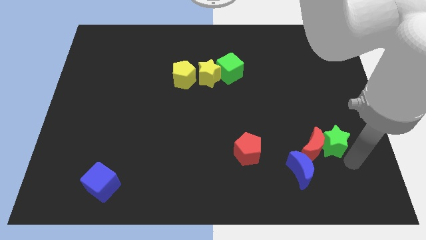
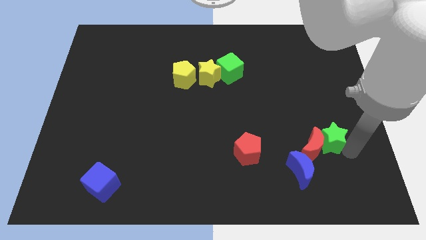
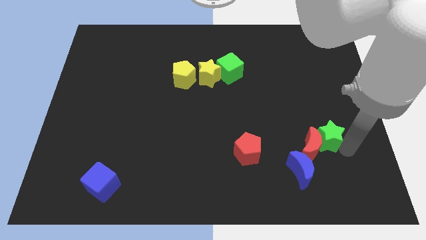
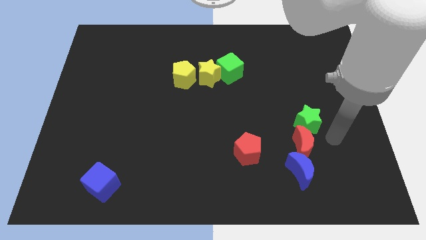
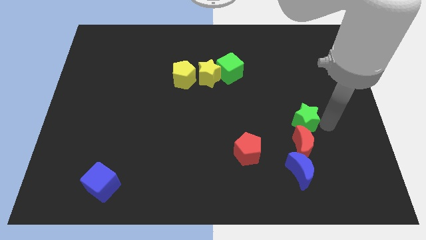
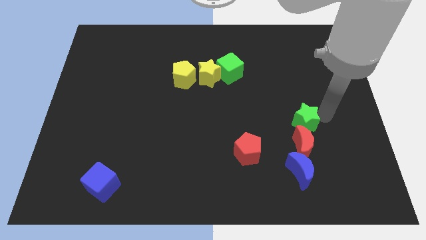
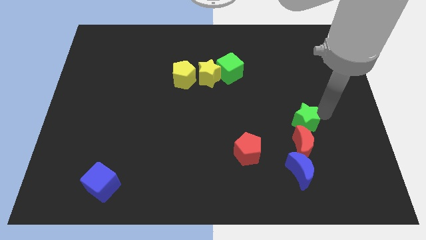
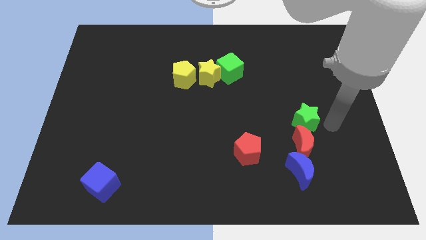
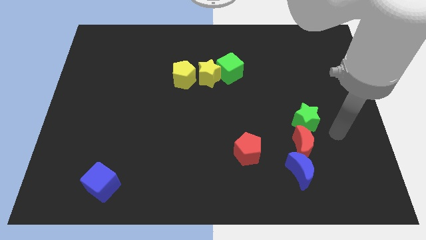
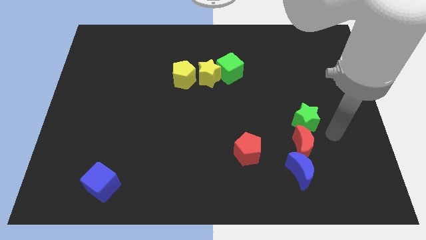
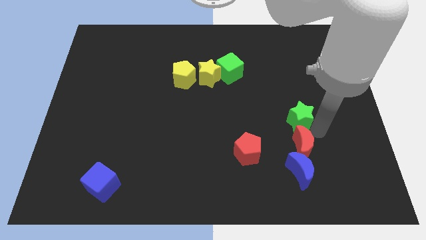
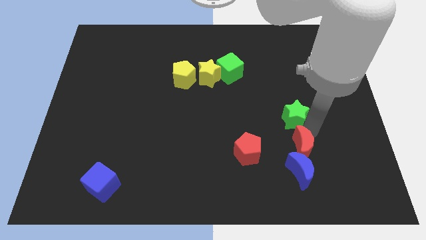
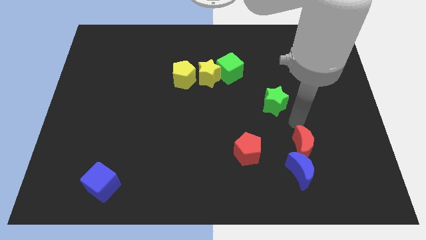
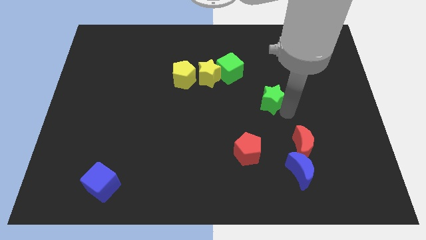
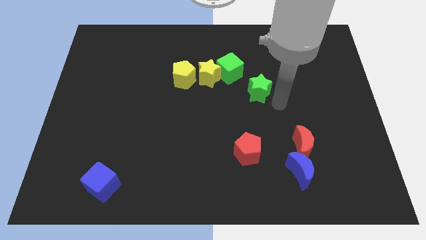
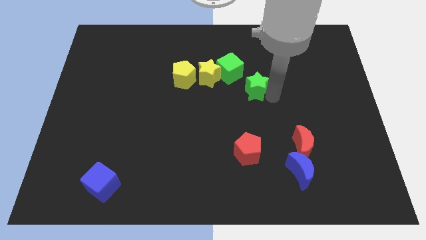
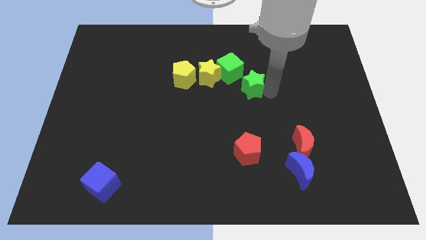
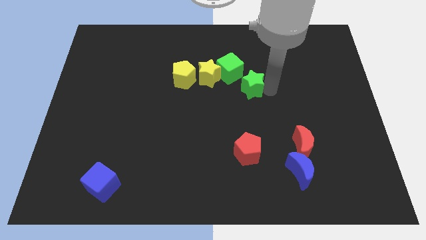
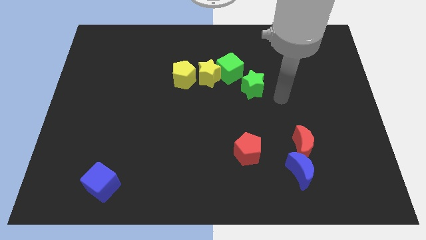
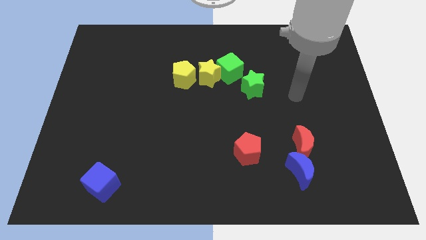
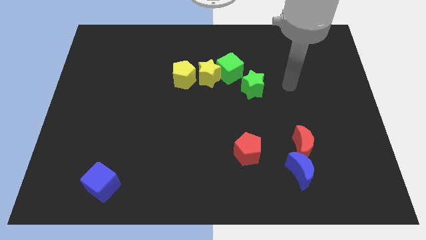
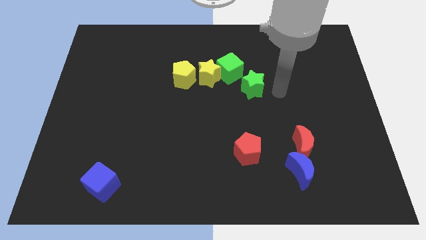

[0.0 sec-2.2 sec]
move the green star towards the bottom of the green cube

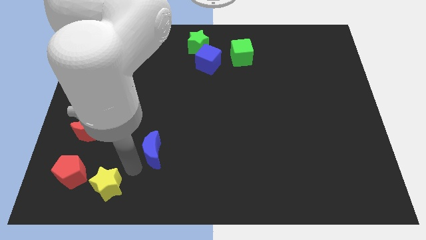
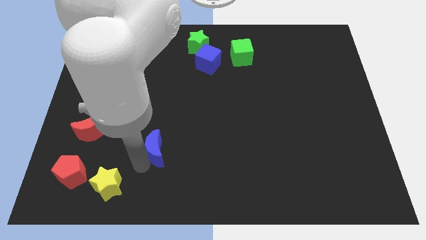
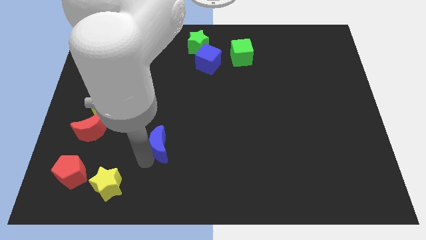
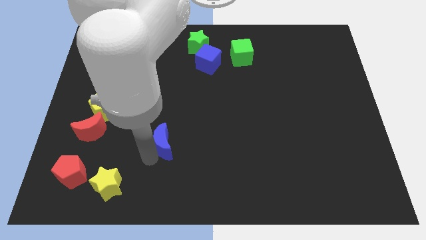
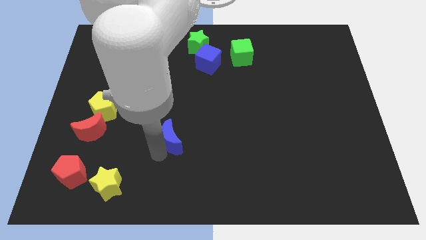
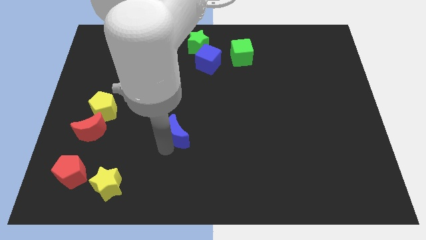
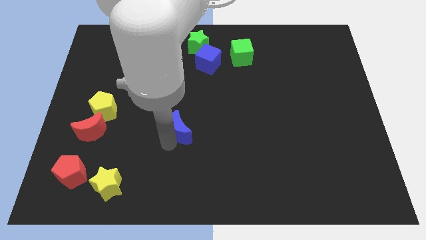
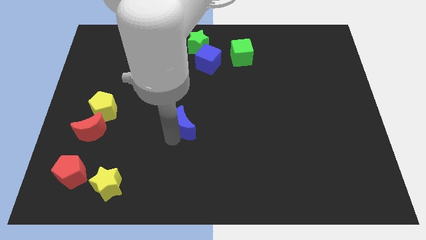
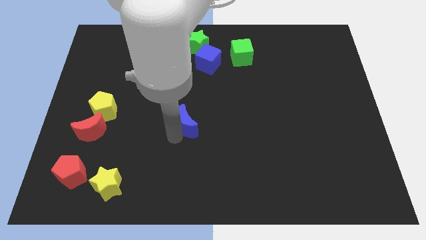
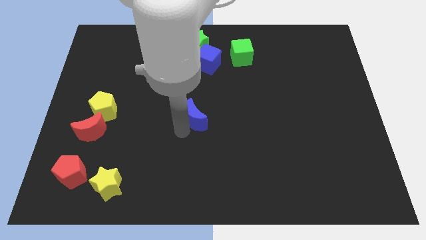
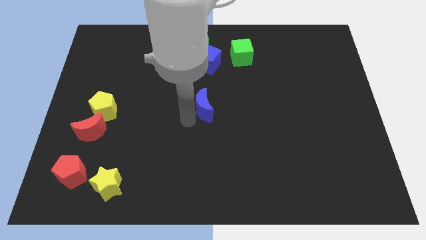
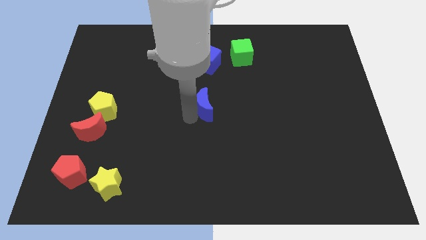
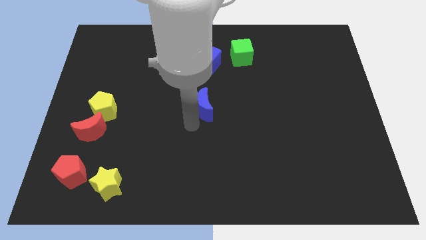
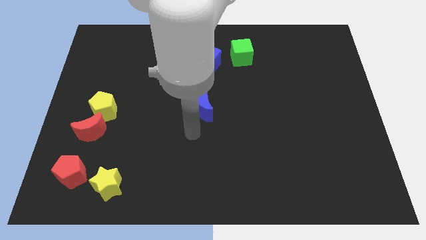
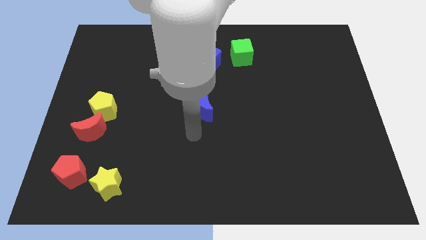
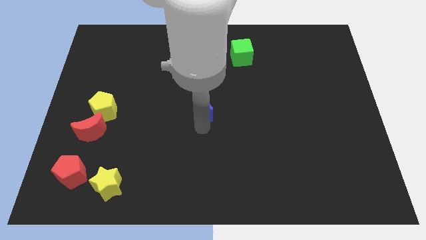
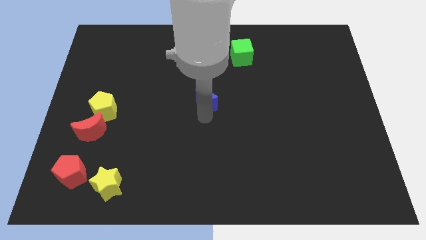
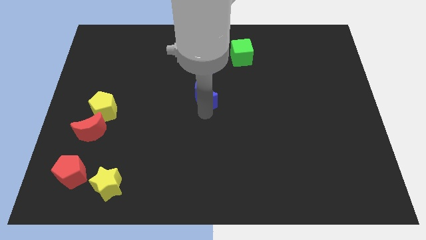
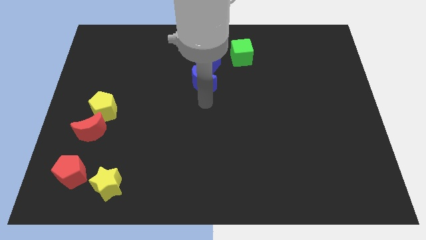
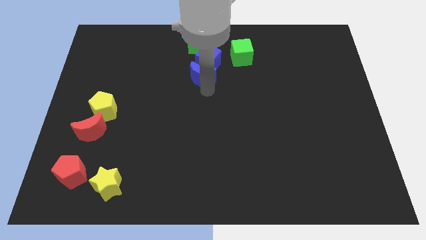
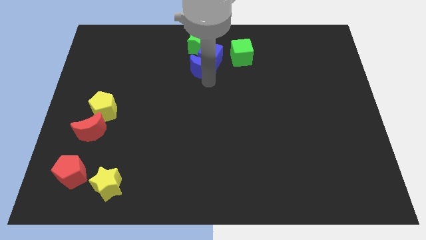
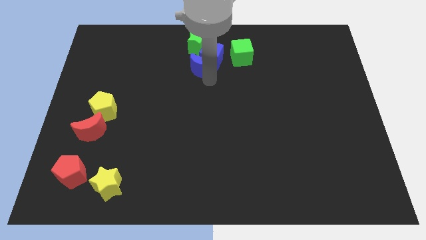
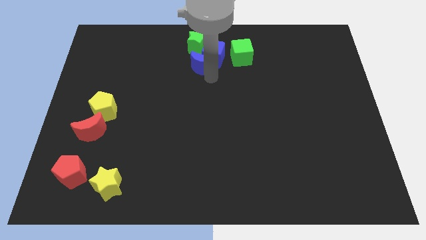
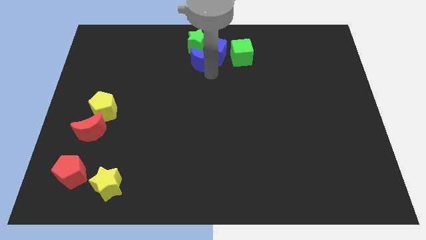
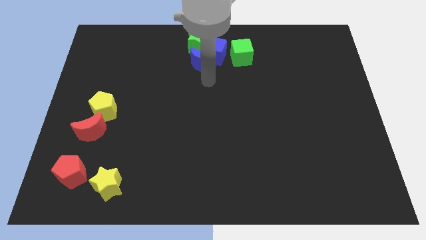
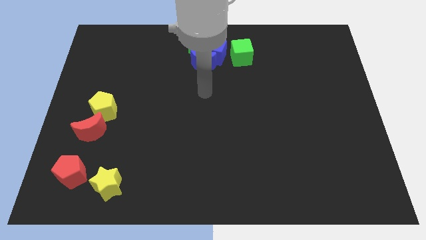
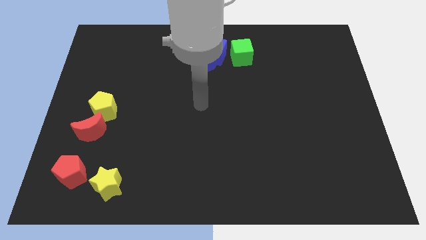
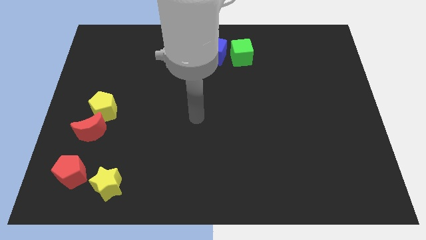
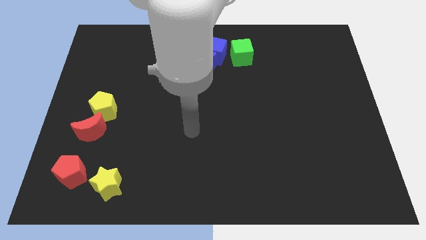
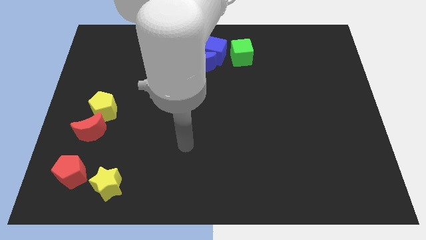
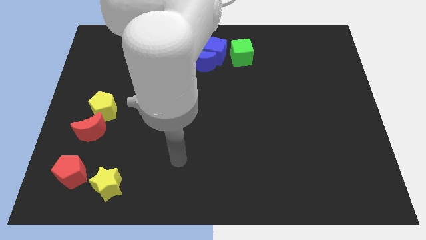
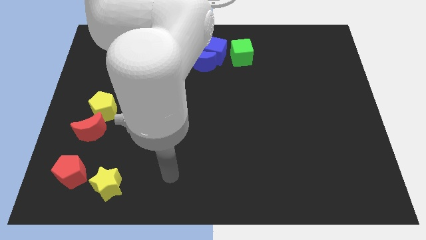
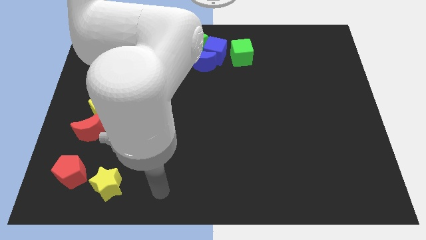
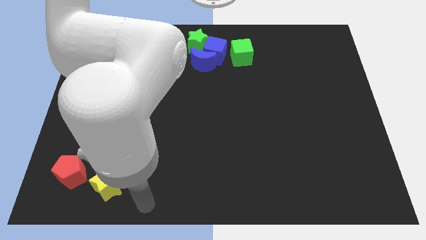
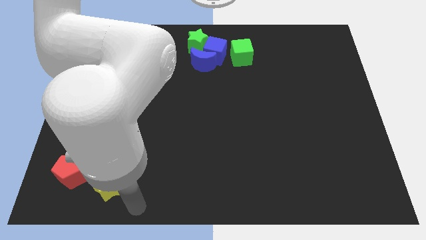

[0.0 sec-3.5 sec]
push the blue blocks and green star towards the top center of the board

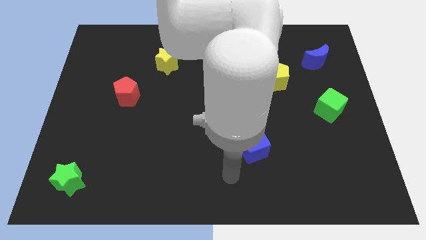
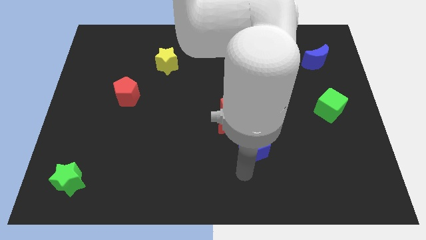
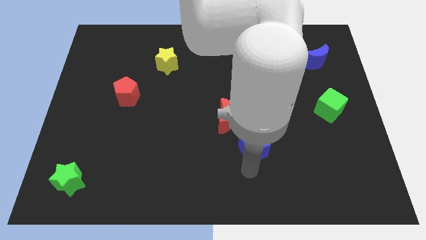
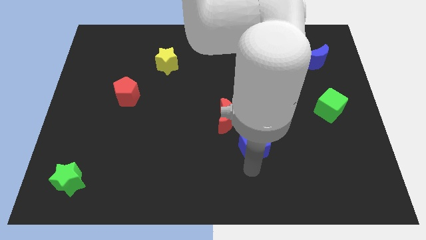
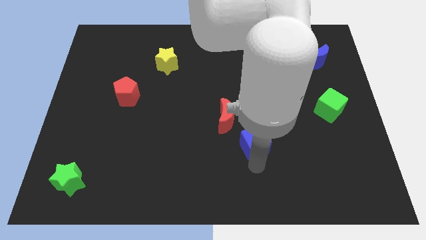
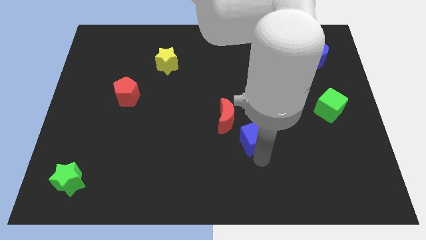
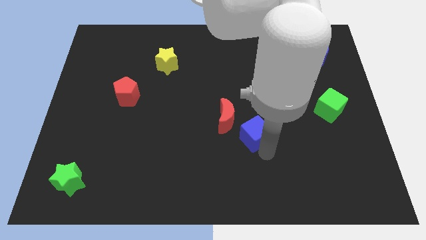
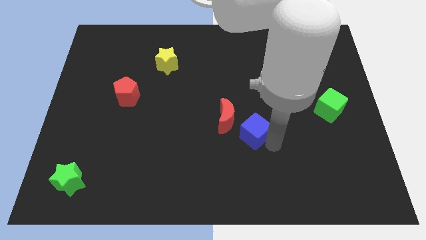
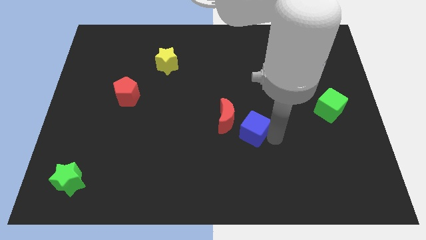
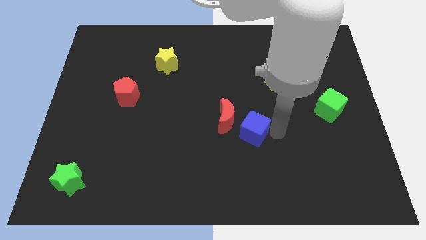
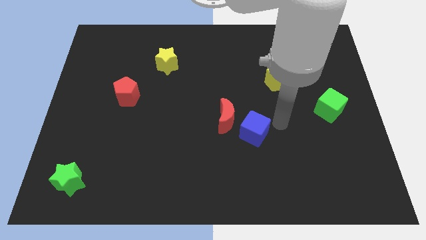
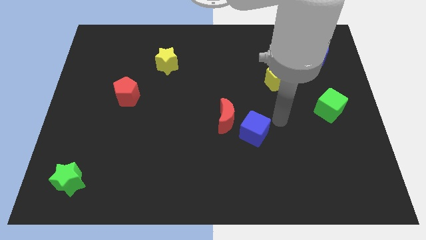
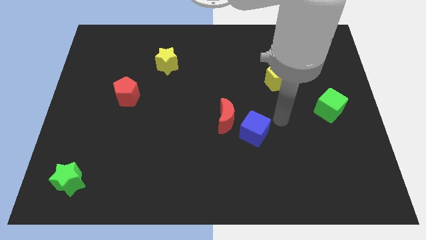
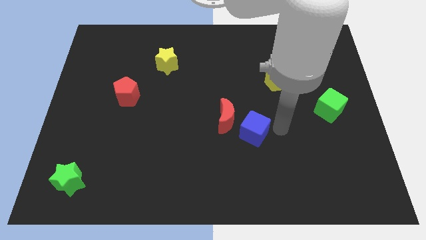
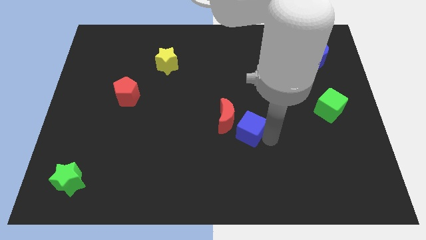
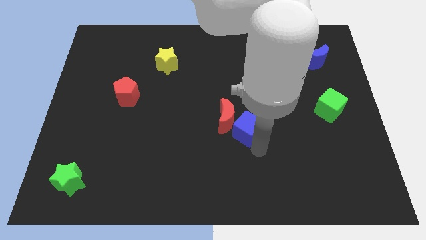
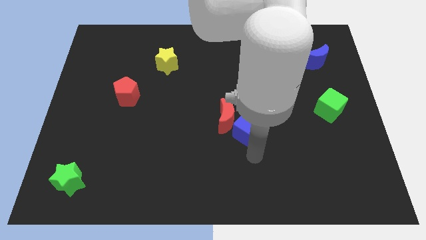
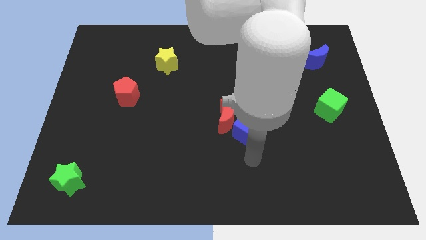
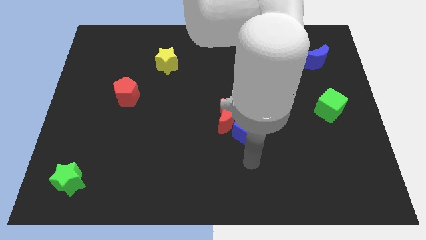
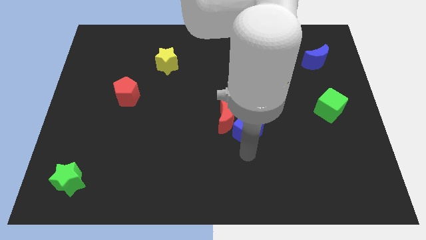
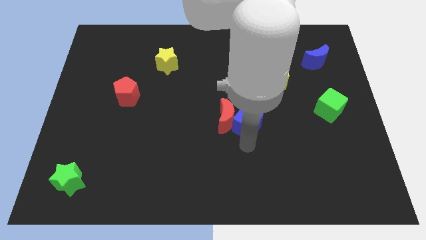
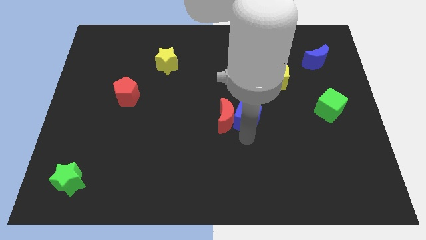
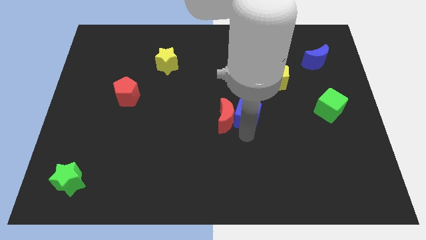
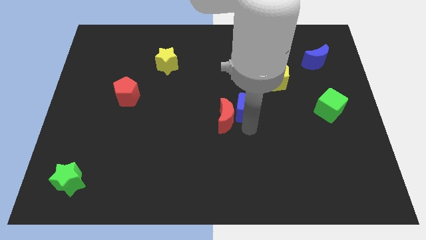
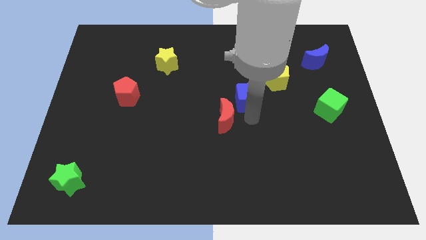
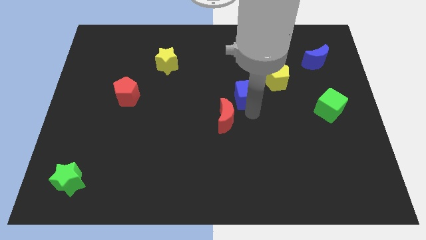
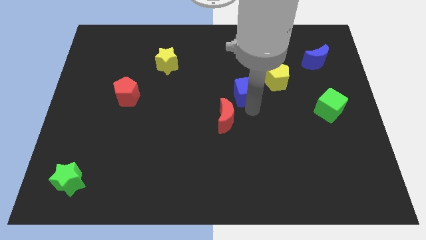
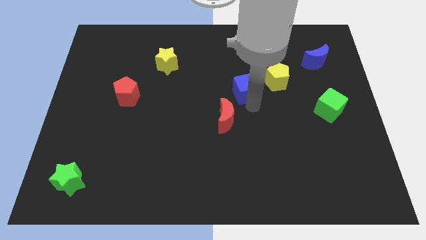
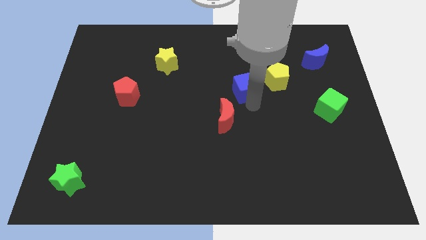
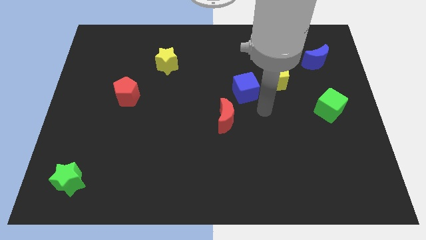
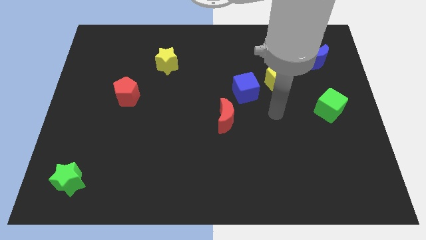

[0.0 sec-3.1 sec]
push the blue cube in between the yellow pentagon and red crescent

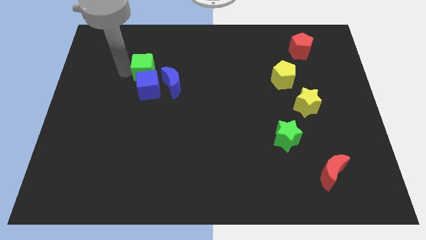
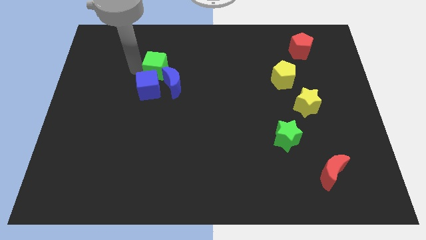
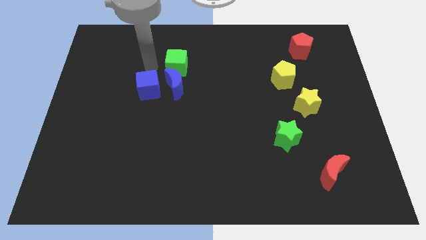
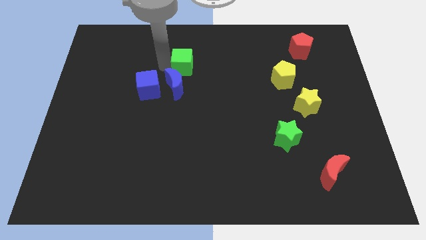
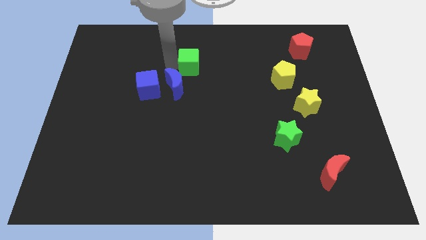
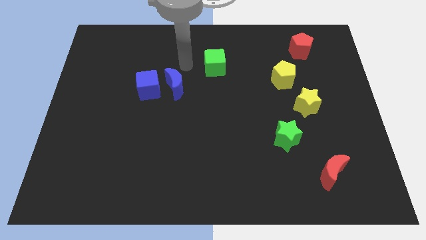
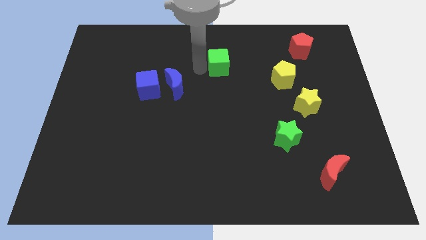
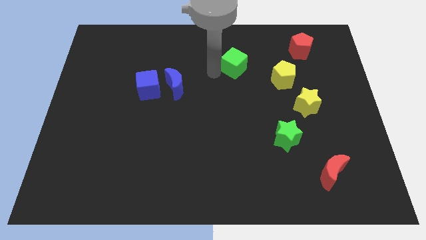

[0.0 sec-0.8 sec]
push the green cube to the right
